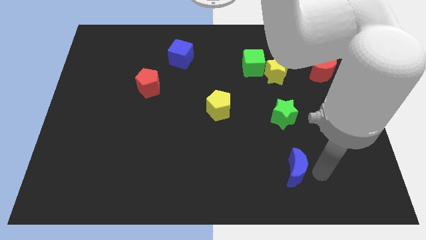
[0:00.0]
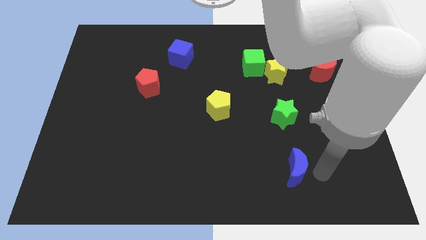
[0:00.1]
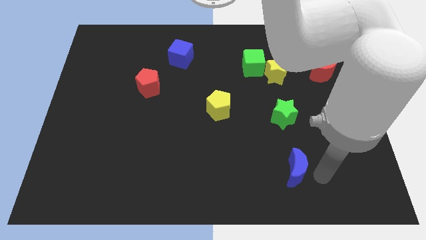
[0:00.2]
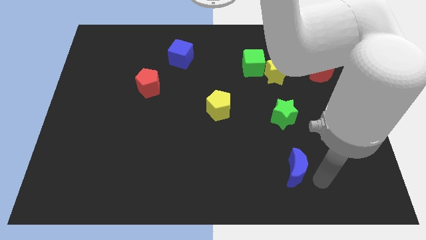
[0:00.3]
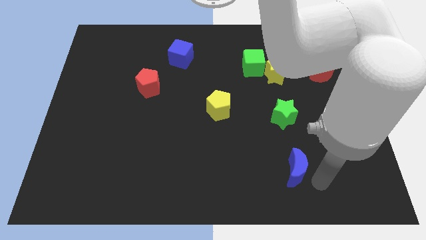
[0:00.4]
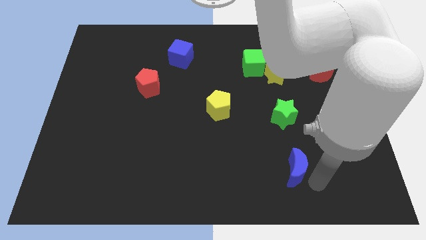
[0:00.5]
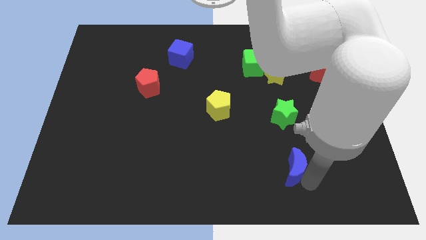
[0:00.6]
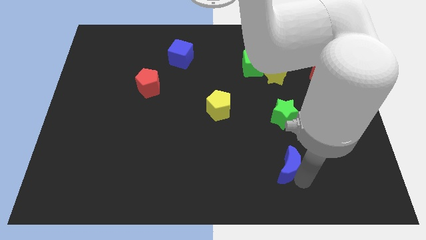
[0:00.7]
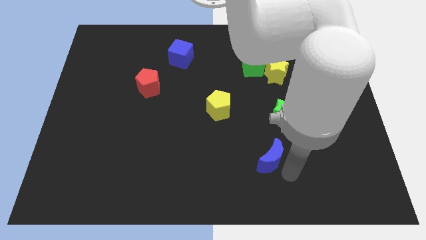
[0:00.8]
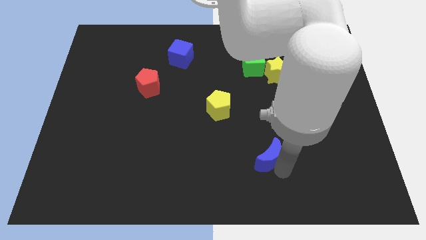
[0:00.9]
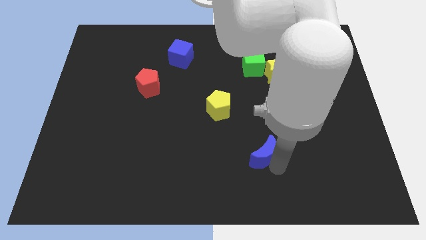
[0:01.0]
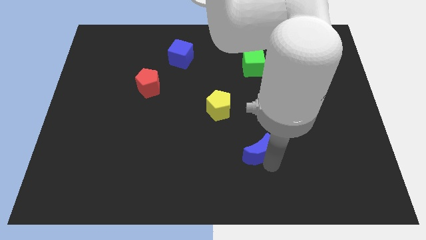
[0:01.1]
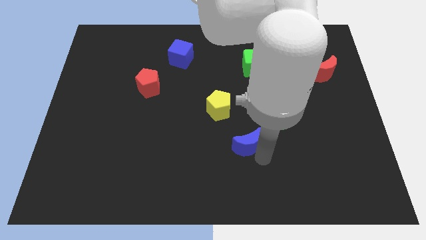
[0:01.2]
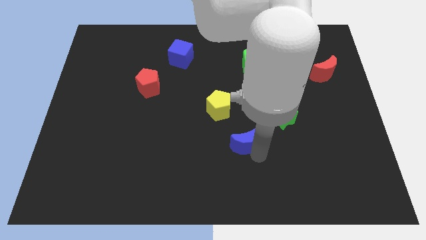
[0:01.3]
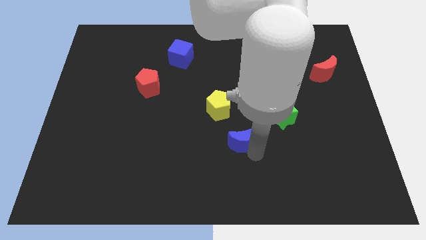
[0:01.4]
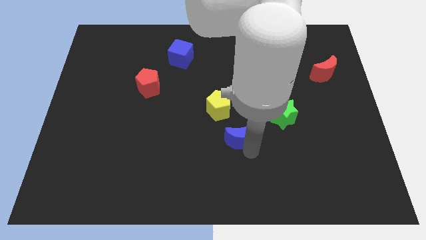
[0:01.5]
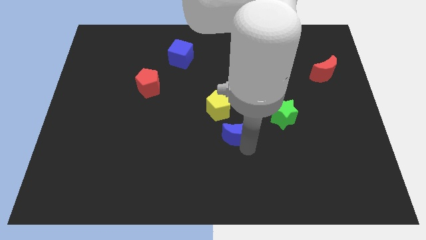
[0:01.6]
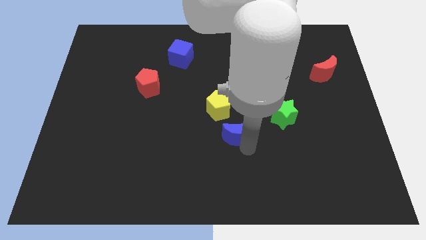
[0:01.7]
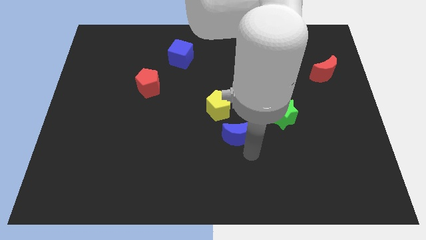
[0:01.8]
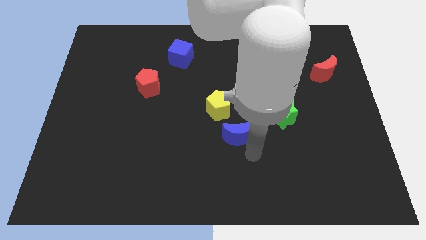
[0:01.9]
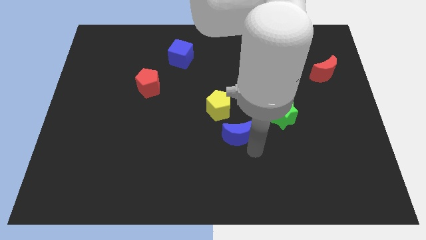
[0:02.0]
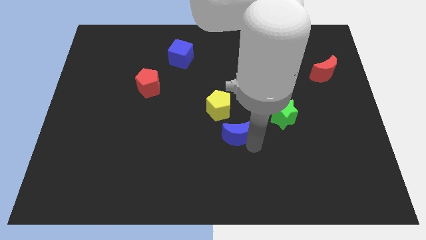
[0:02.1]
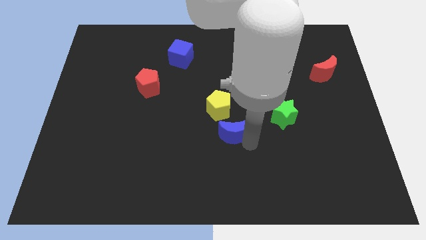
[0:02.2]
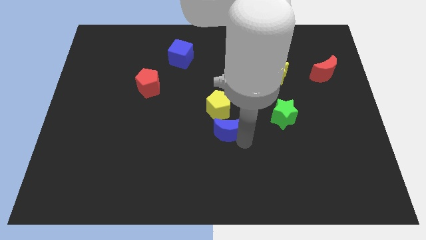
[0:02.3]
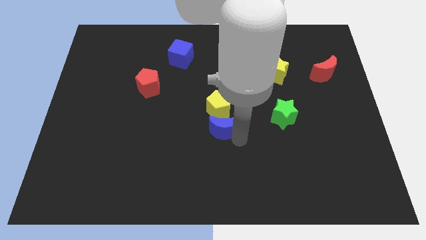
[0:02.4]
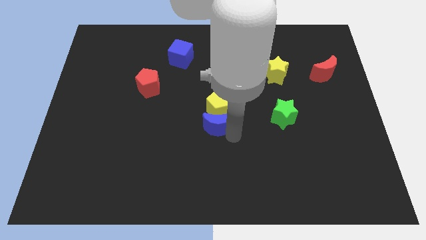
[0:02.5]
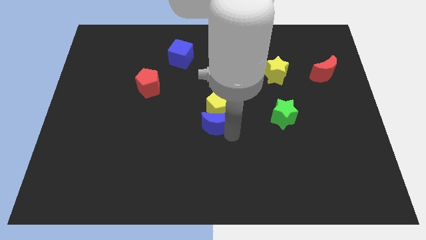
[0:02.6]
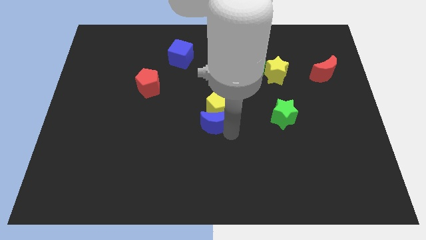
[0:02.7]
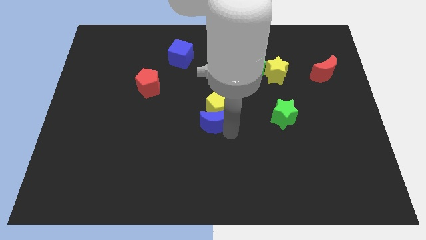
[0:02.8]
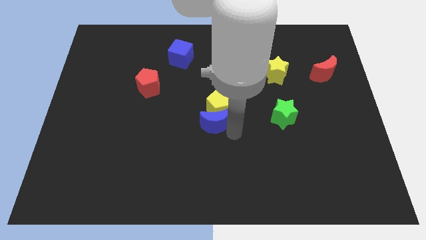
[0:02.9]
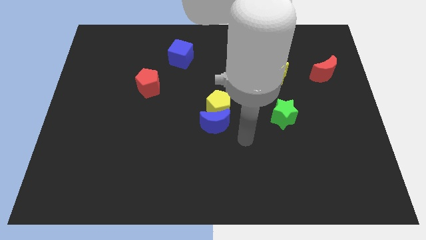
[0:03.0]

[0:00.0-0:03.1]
move blue crescent into the yellow pentagon

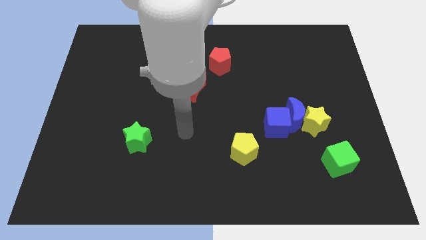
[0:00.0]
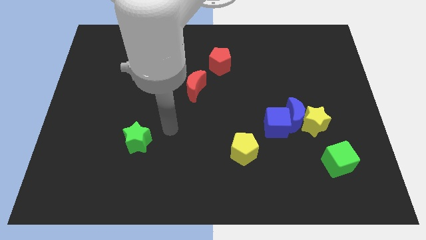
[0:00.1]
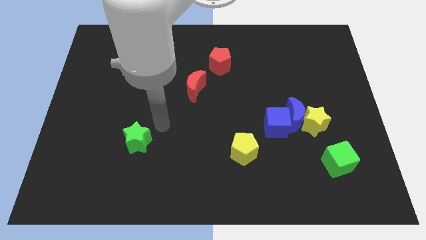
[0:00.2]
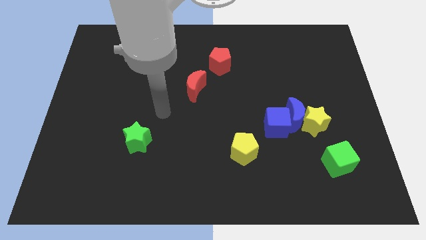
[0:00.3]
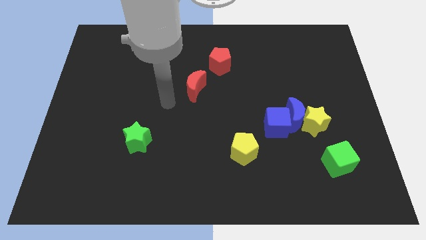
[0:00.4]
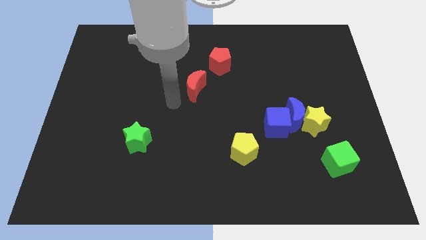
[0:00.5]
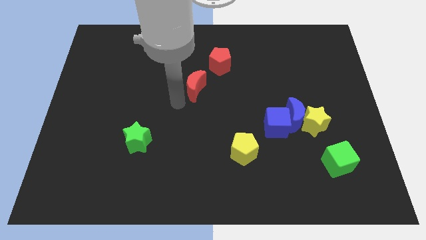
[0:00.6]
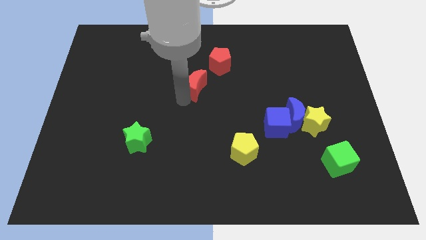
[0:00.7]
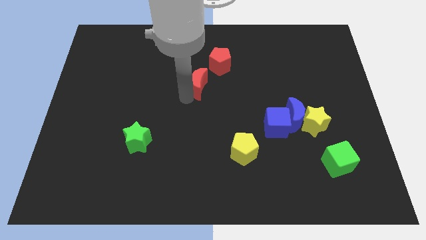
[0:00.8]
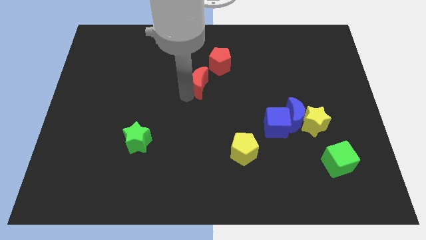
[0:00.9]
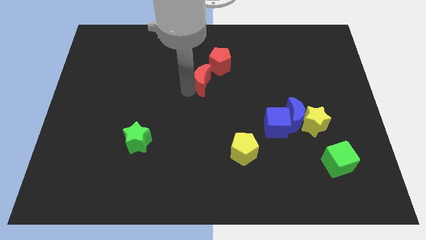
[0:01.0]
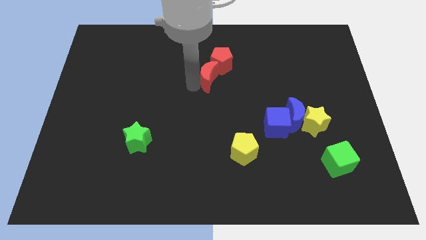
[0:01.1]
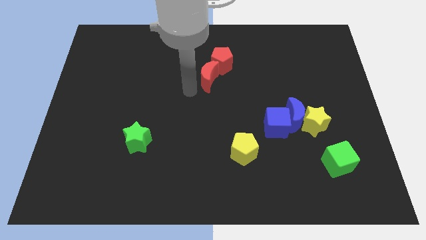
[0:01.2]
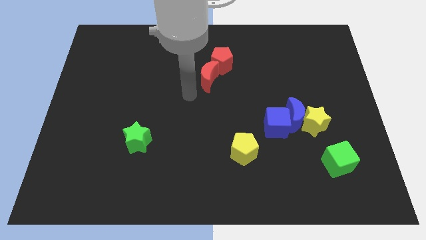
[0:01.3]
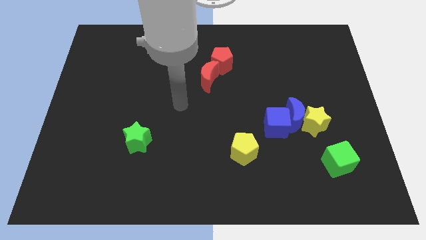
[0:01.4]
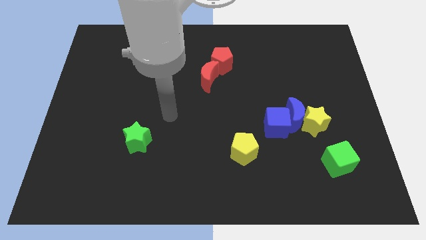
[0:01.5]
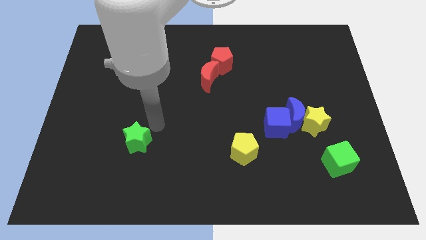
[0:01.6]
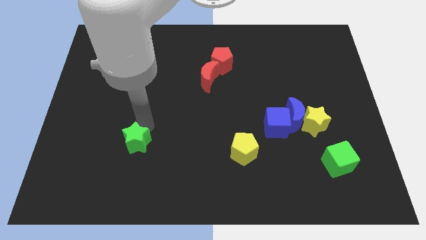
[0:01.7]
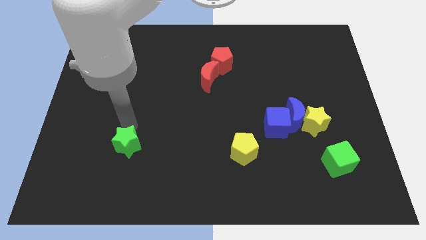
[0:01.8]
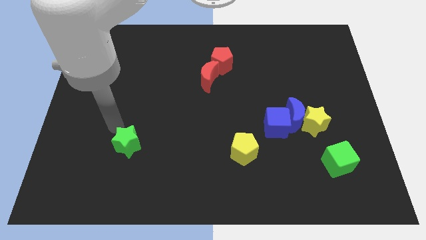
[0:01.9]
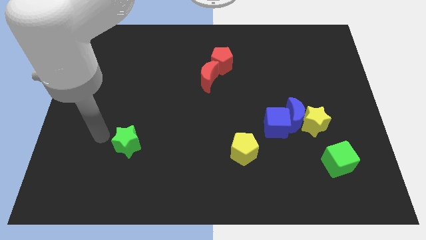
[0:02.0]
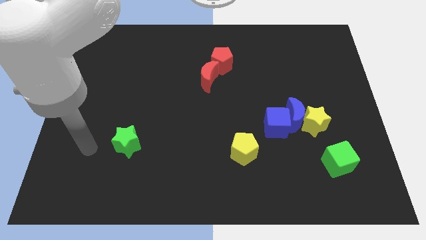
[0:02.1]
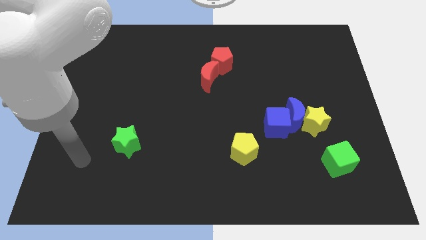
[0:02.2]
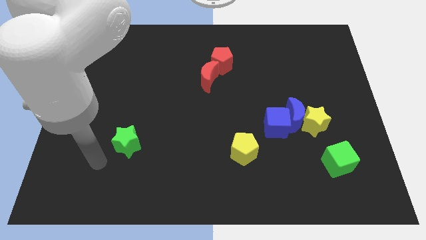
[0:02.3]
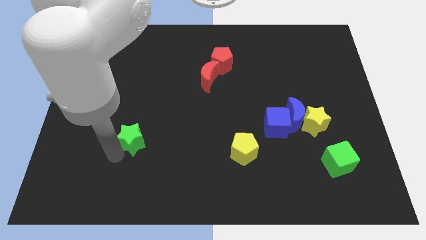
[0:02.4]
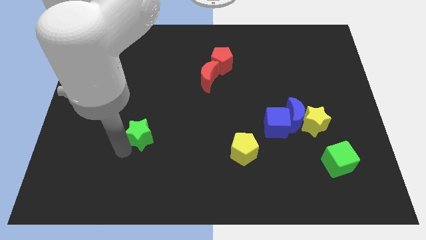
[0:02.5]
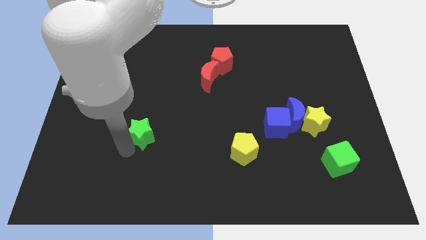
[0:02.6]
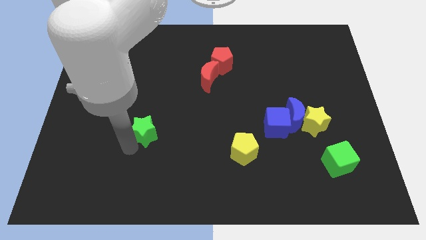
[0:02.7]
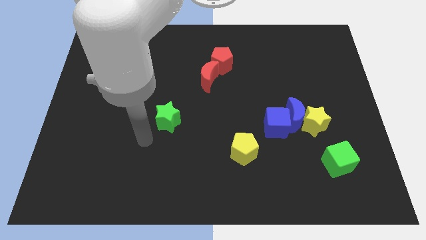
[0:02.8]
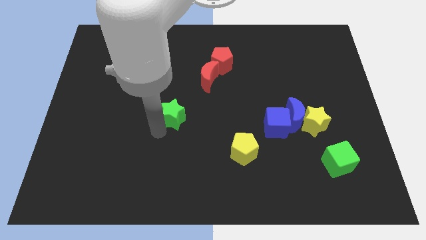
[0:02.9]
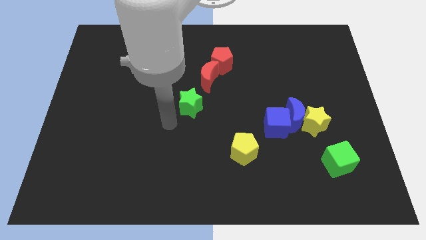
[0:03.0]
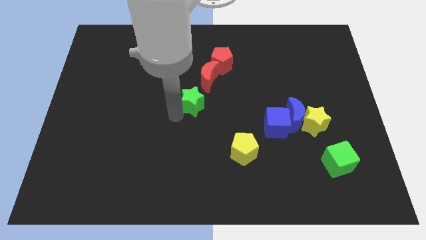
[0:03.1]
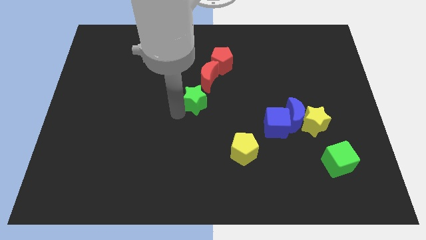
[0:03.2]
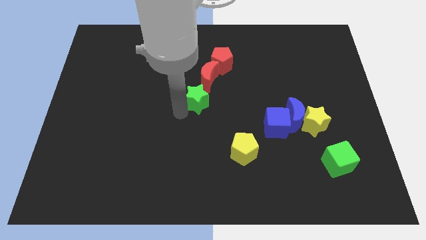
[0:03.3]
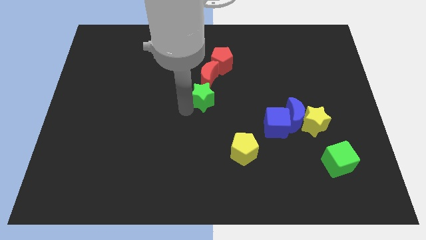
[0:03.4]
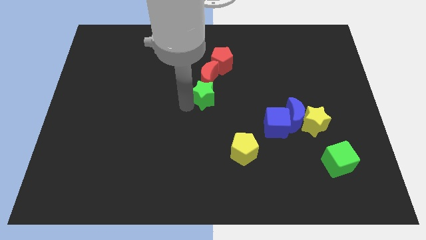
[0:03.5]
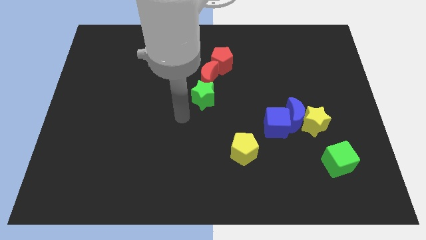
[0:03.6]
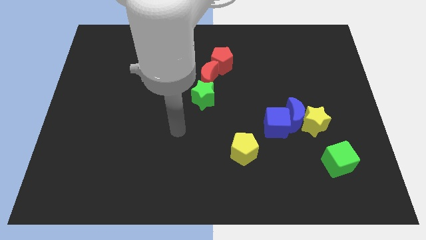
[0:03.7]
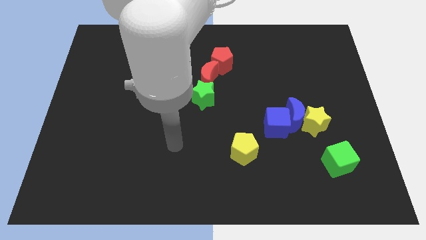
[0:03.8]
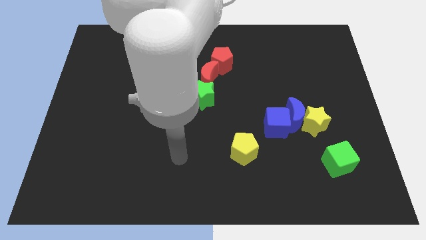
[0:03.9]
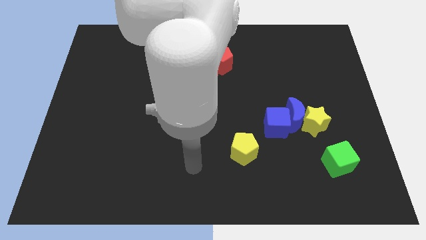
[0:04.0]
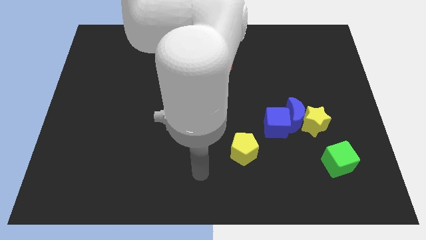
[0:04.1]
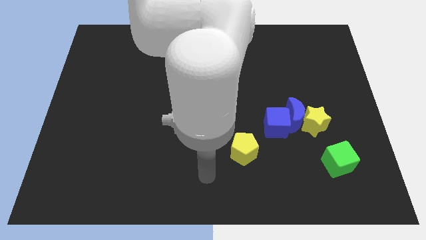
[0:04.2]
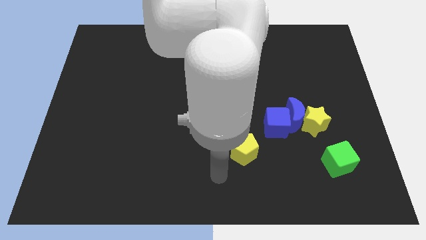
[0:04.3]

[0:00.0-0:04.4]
slide the green star to the bottom side of the red crescent

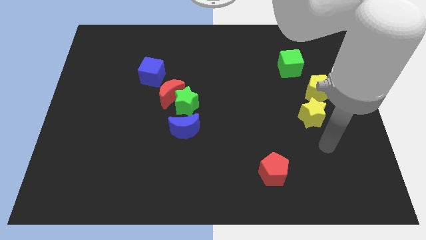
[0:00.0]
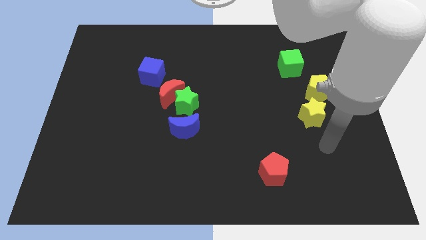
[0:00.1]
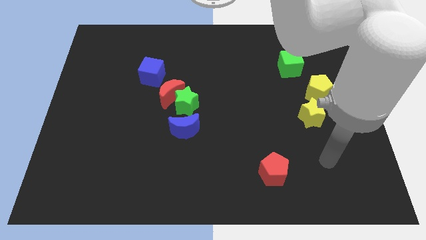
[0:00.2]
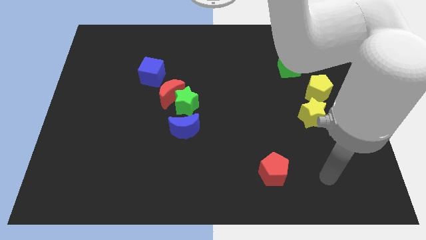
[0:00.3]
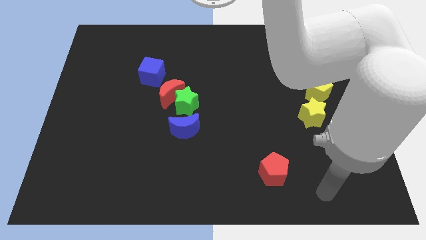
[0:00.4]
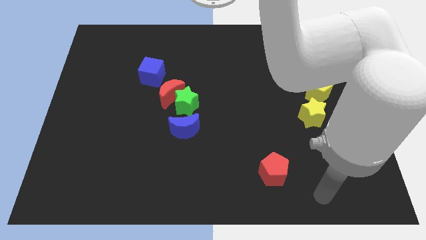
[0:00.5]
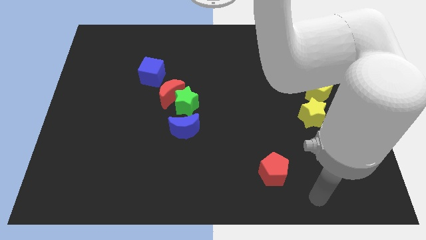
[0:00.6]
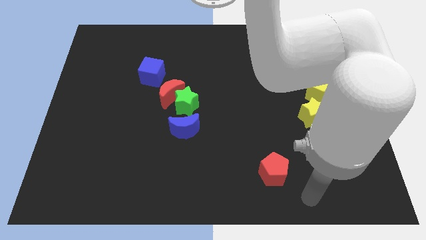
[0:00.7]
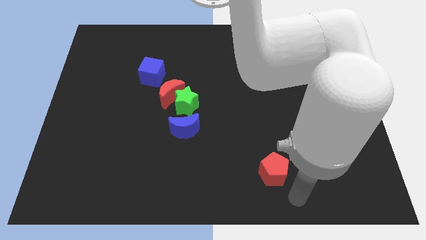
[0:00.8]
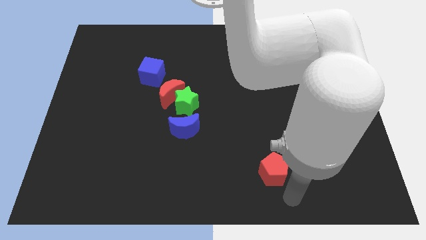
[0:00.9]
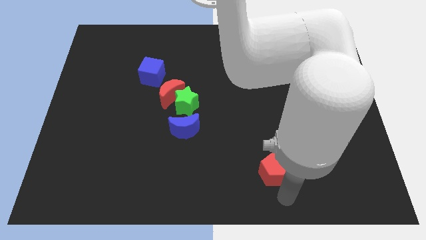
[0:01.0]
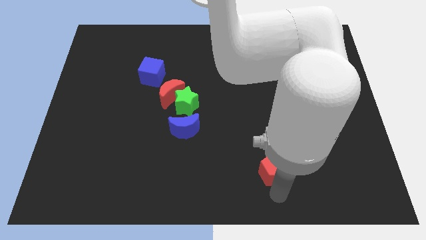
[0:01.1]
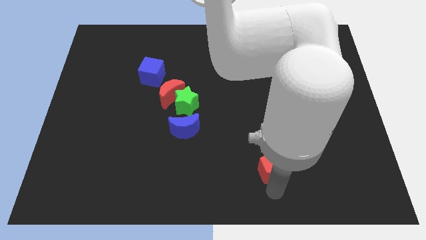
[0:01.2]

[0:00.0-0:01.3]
tap the red pentagon
